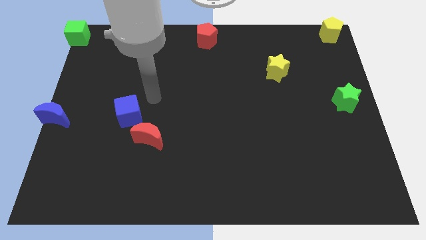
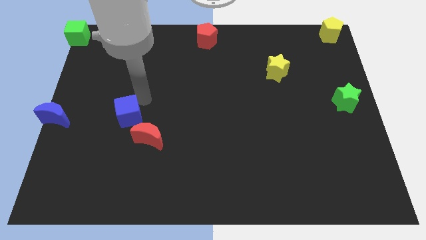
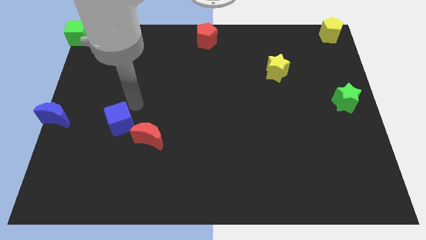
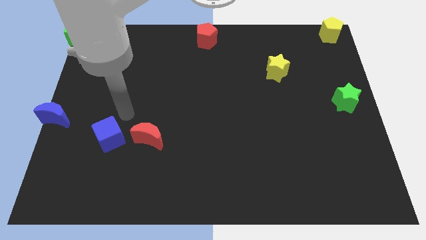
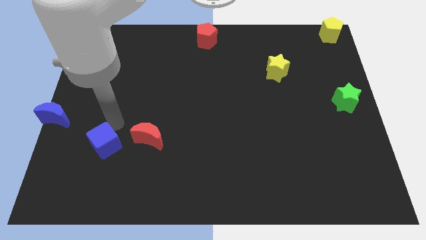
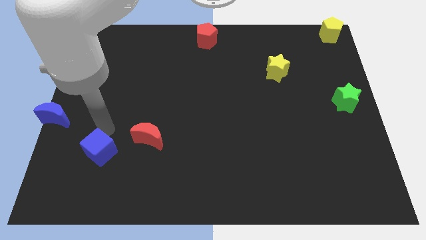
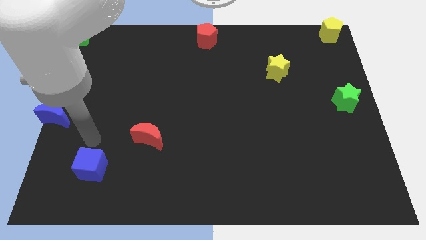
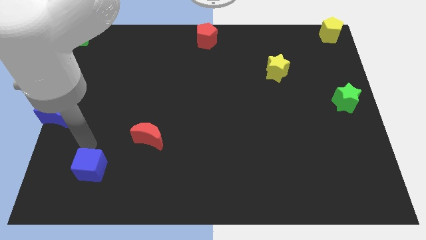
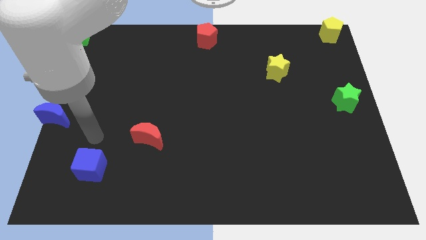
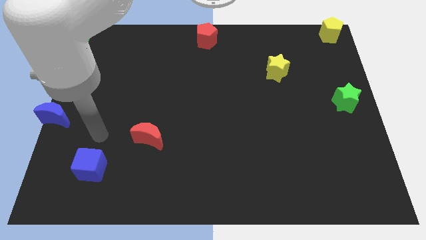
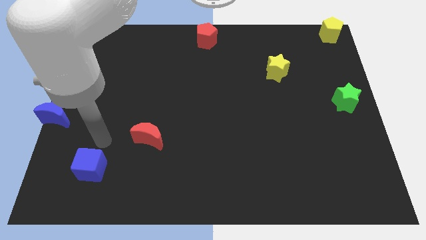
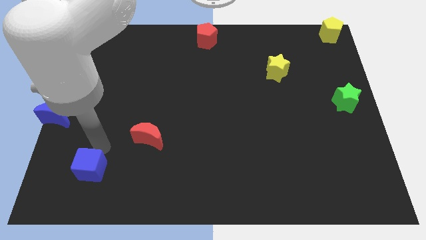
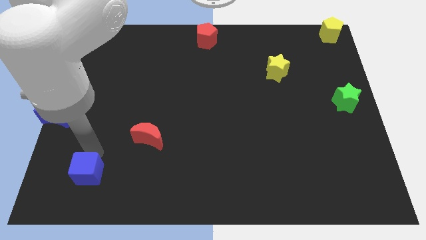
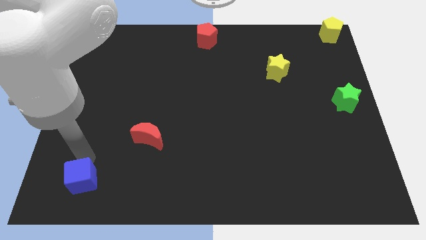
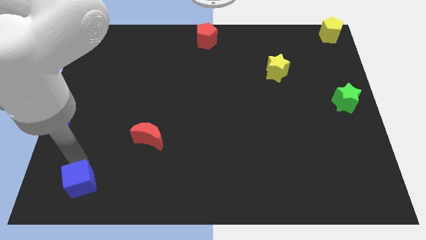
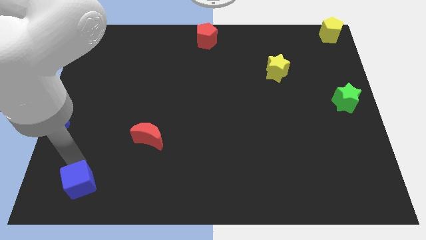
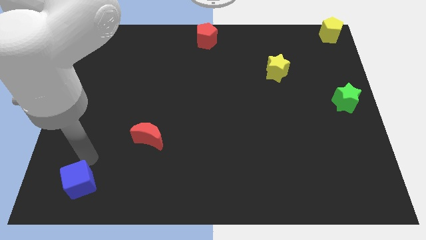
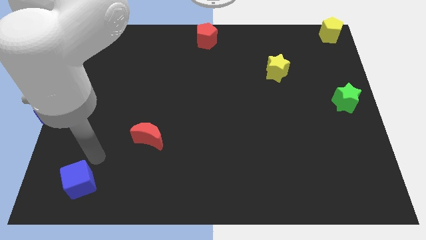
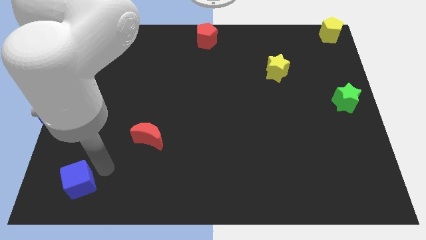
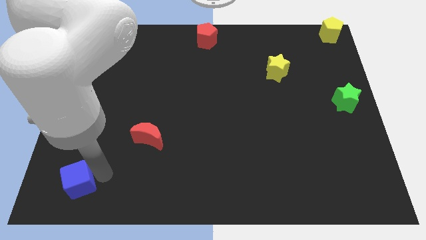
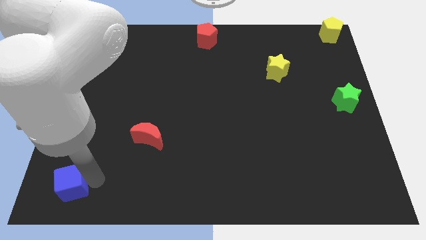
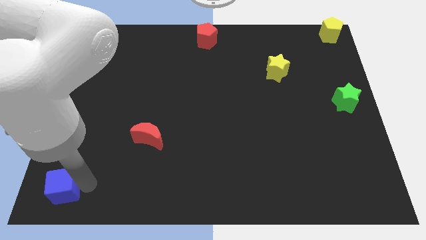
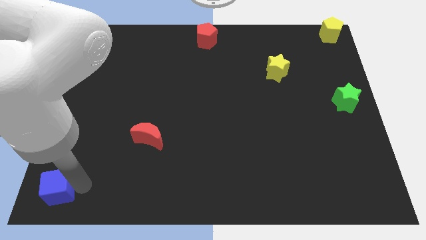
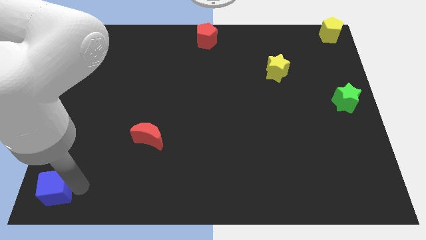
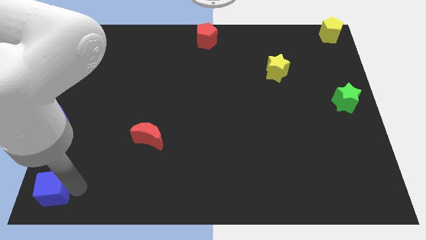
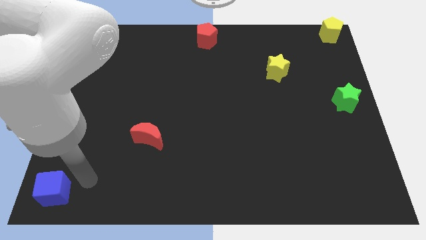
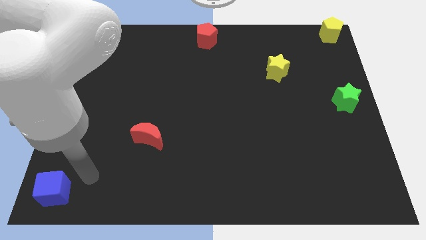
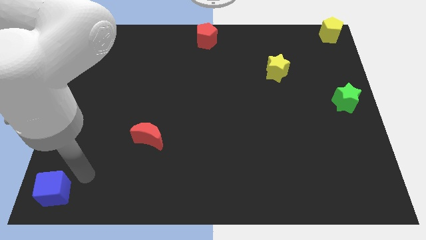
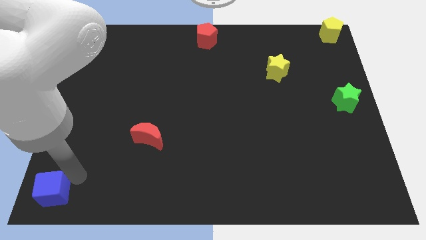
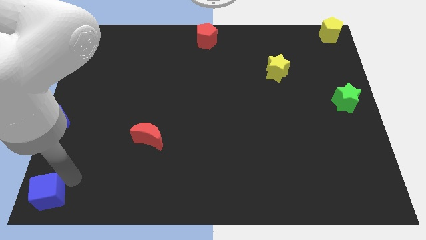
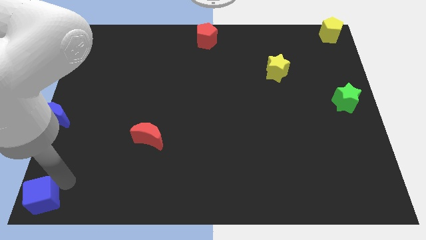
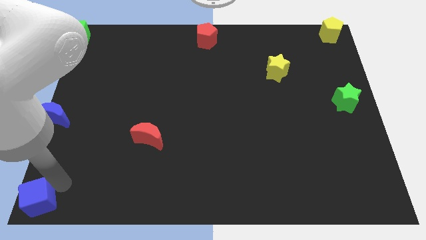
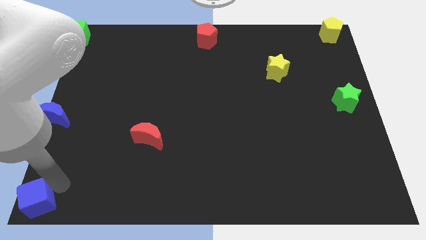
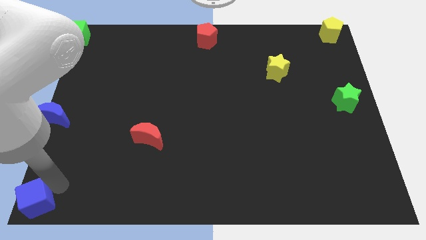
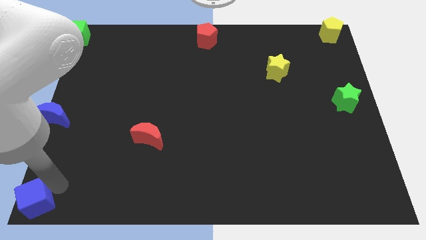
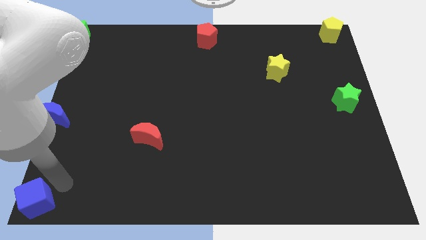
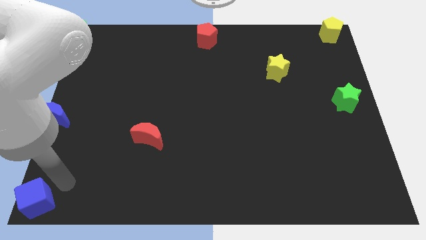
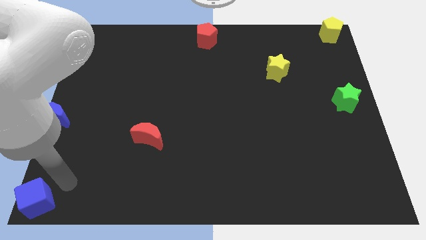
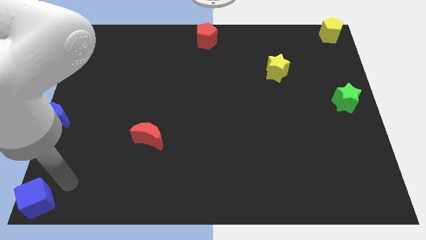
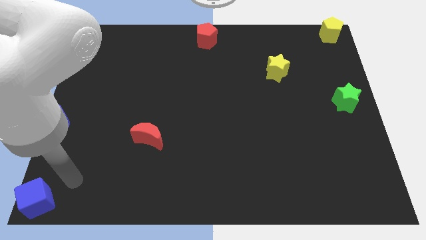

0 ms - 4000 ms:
place blue cube towards bottom left corner

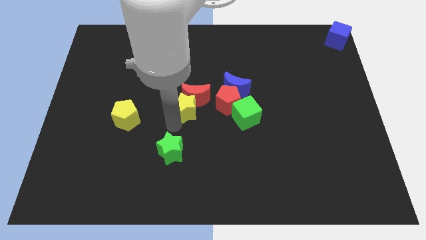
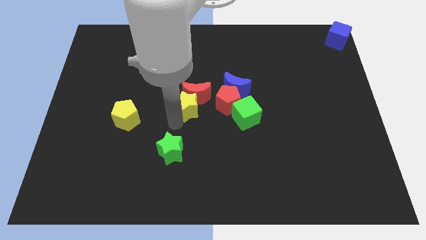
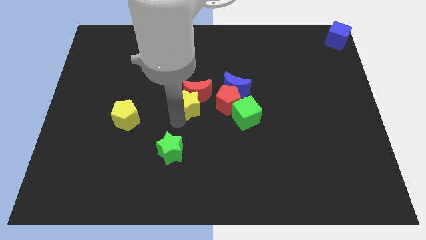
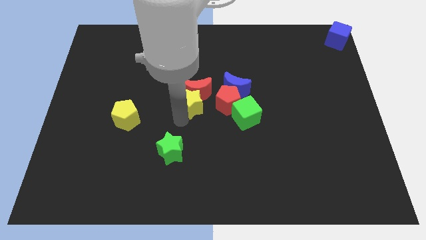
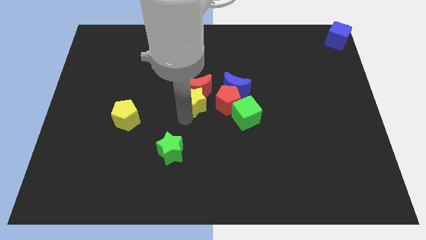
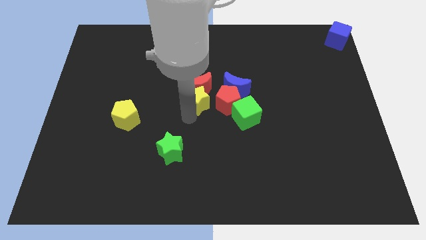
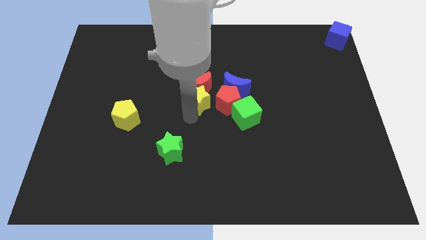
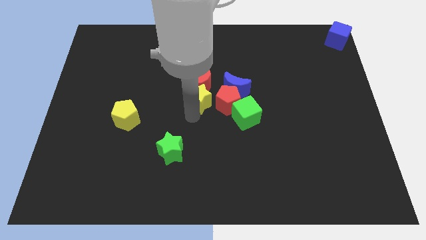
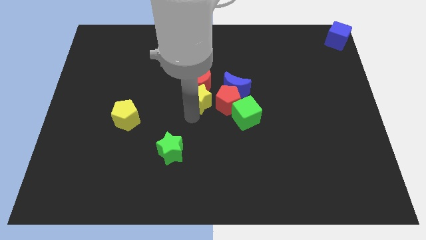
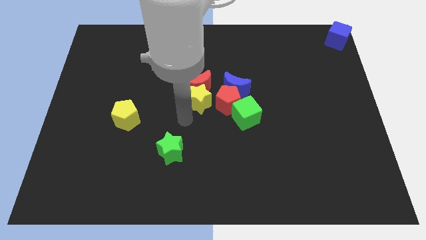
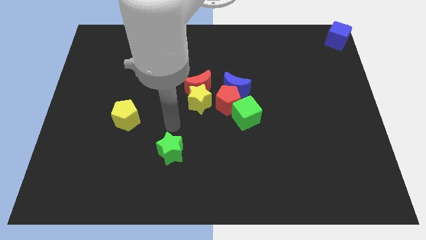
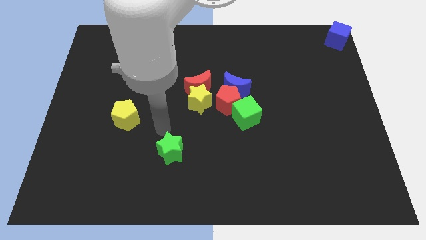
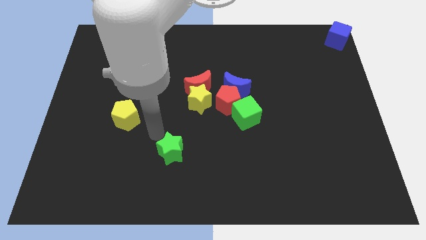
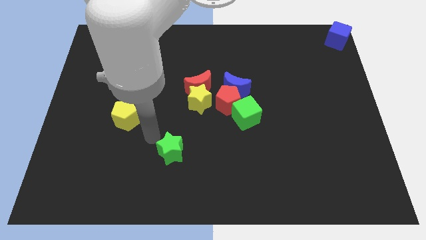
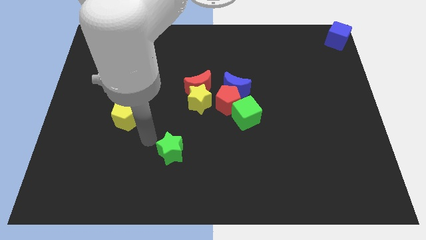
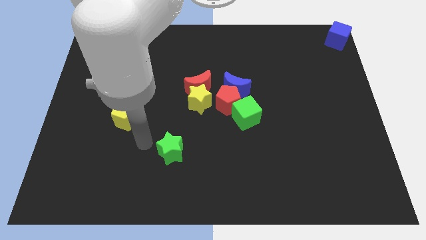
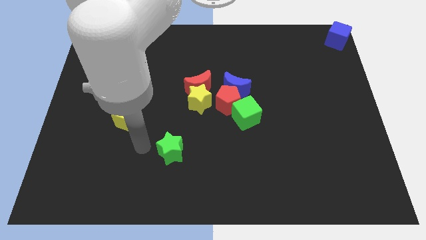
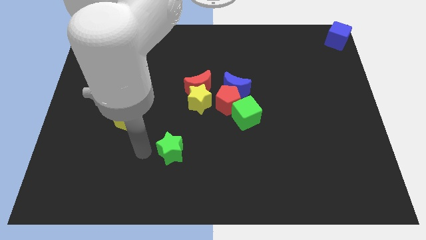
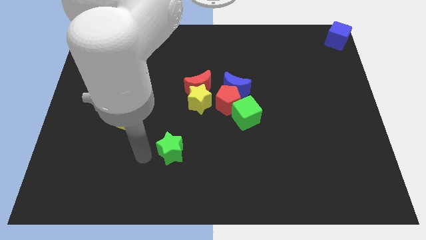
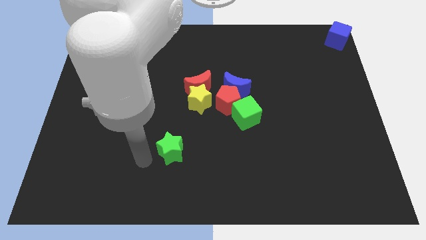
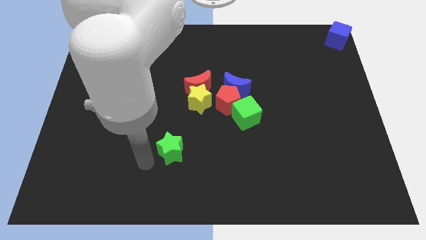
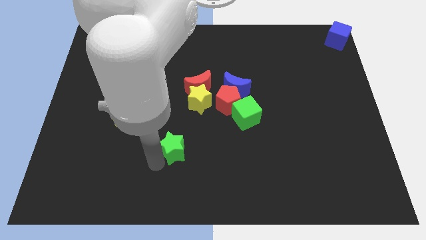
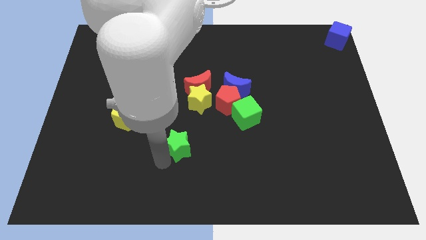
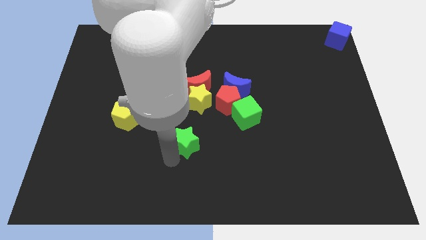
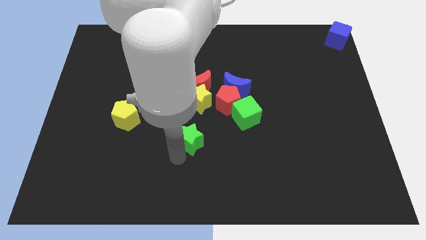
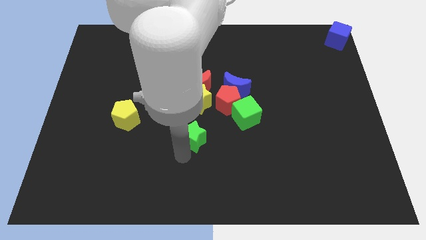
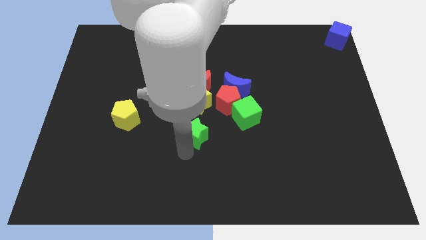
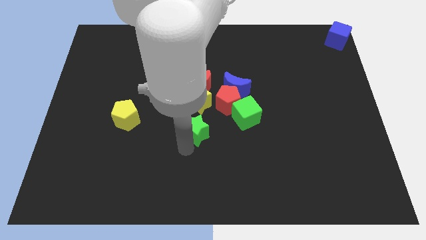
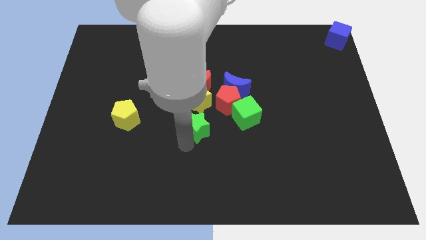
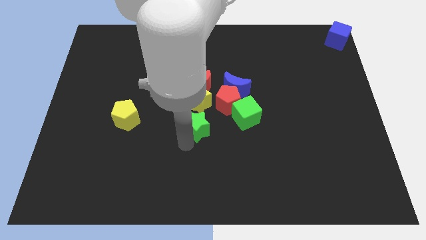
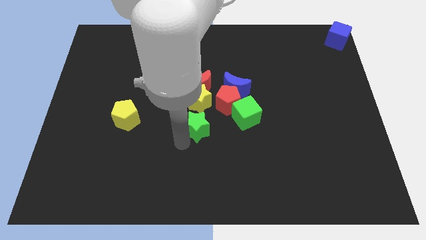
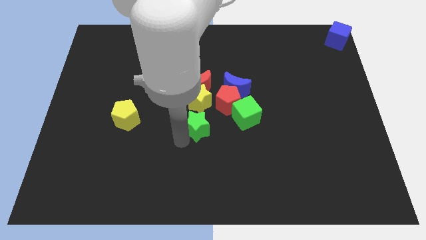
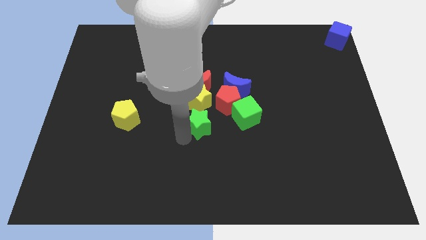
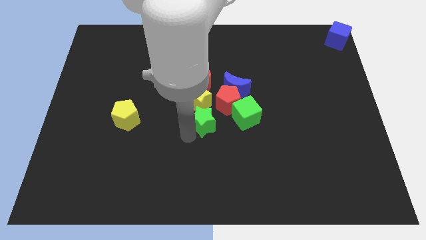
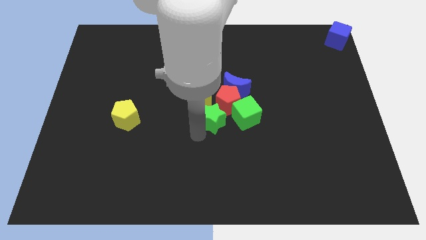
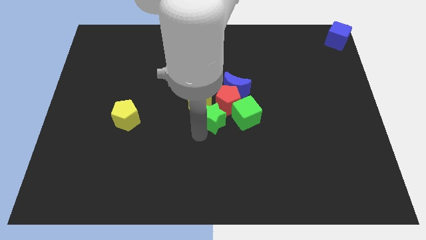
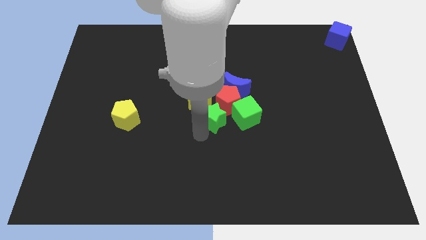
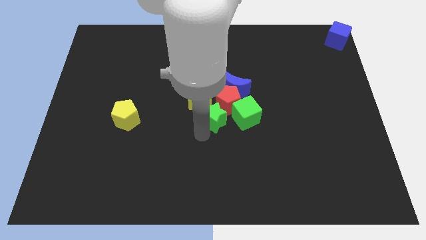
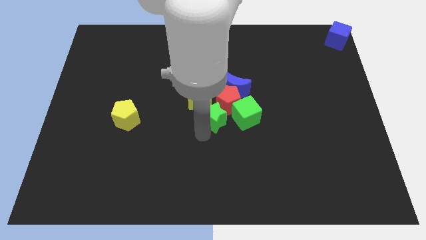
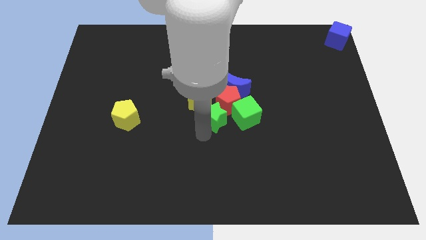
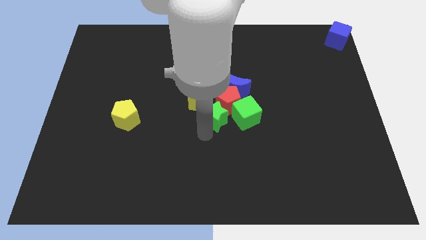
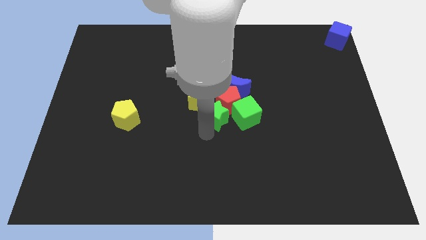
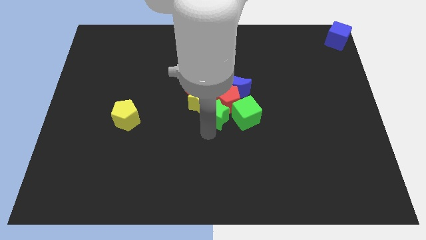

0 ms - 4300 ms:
move green star into group of blocks

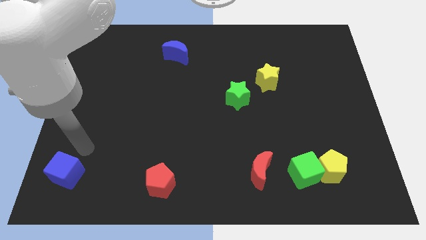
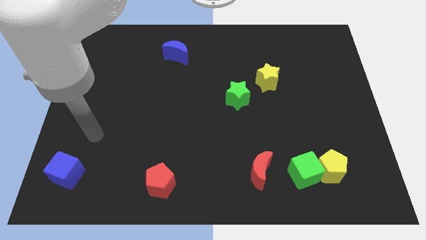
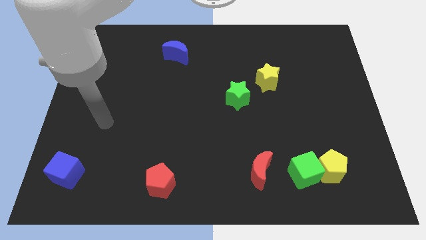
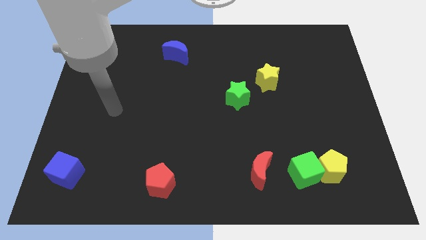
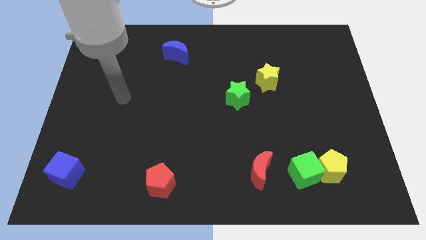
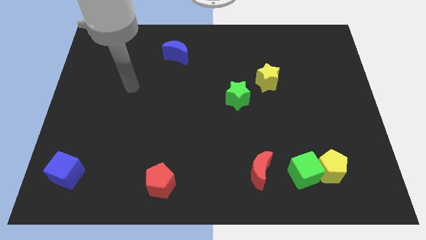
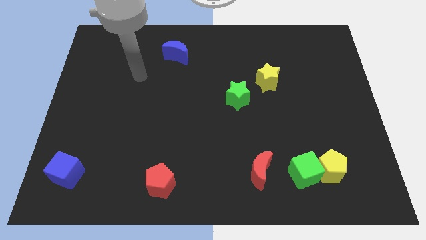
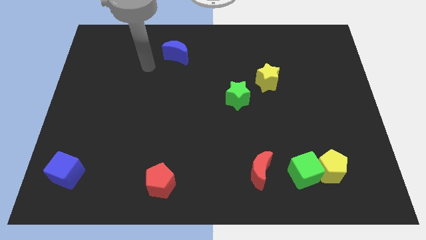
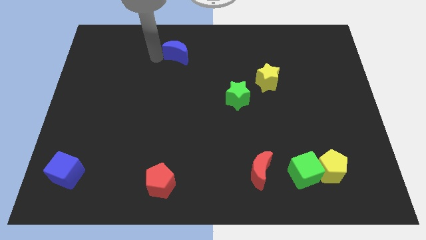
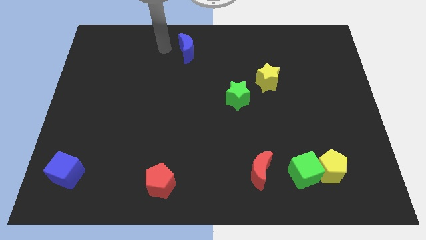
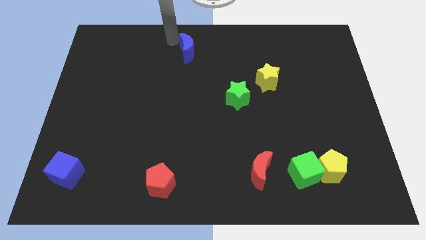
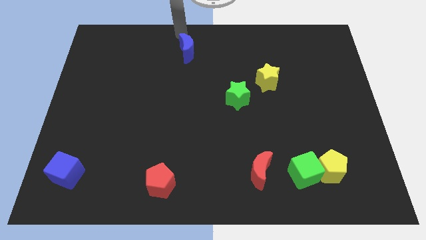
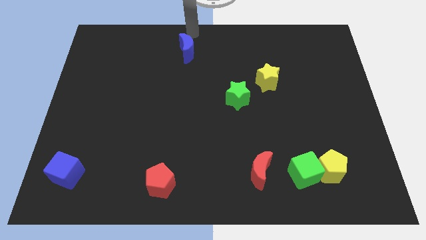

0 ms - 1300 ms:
slightly push the blue crescent on the board
